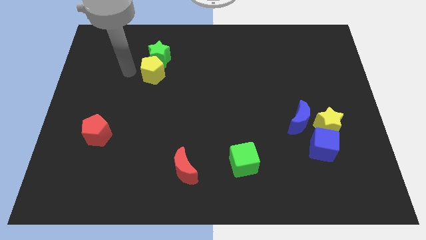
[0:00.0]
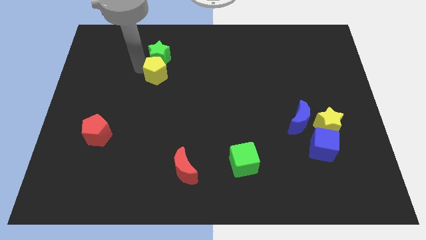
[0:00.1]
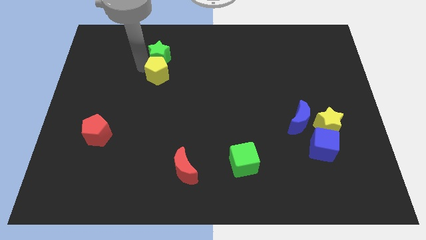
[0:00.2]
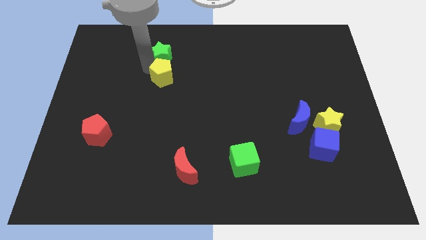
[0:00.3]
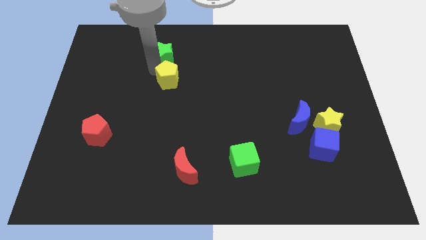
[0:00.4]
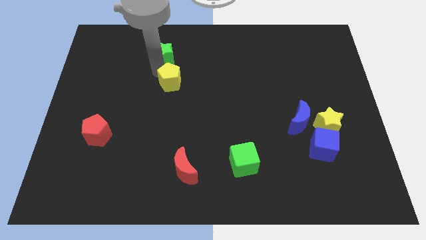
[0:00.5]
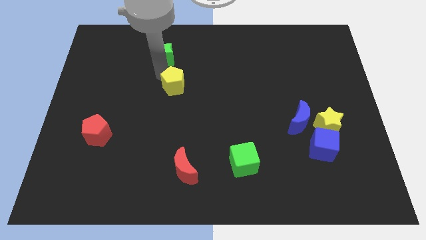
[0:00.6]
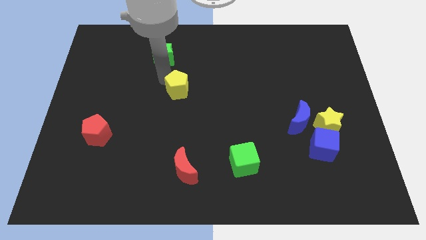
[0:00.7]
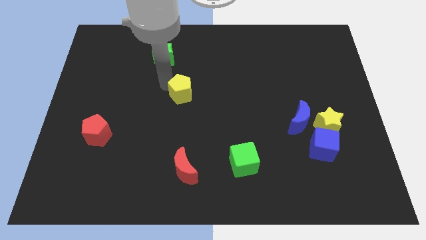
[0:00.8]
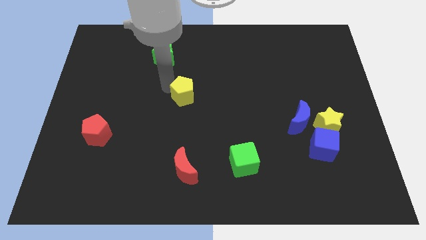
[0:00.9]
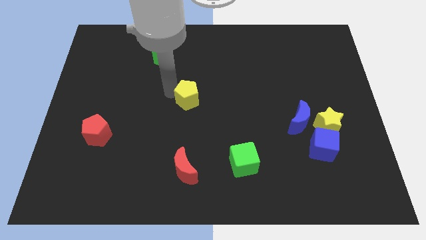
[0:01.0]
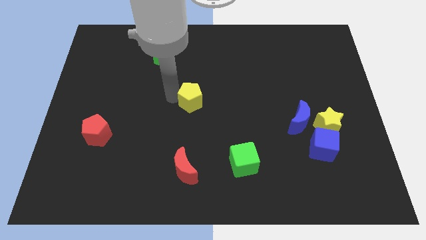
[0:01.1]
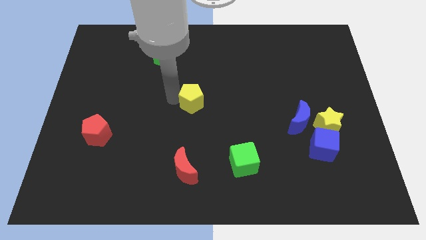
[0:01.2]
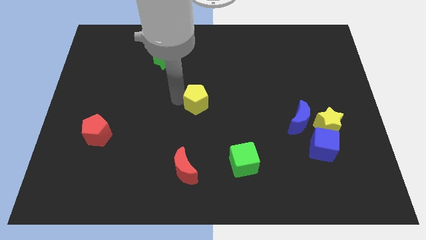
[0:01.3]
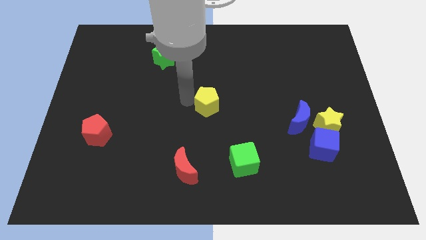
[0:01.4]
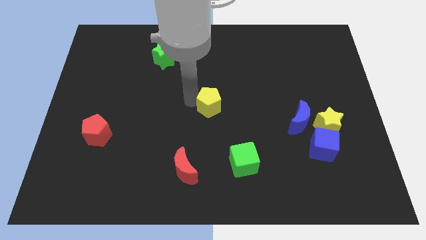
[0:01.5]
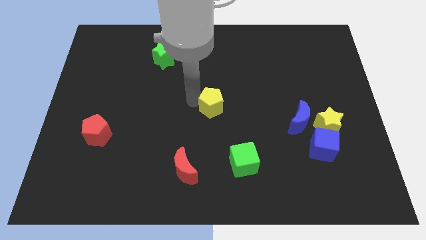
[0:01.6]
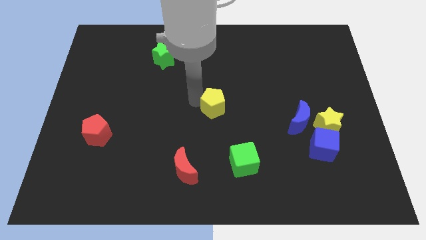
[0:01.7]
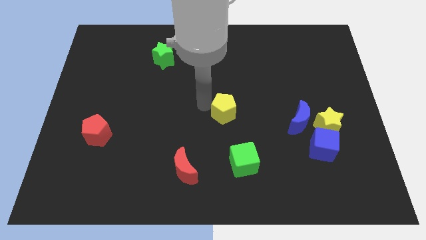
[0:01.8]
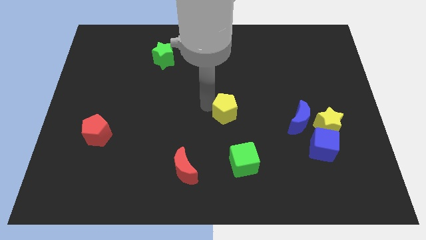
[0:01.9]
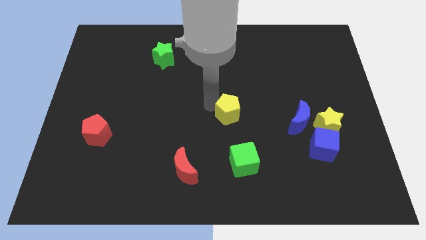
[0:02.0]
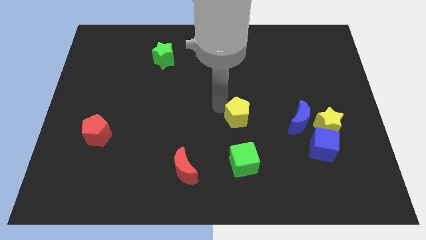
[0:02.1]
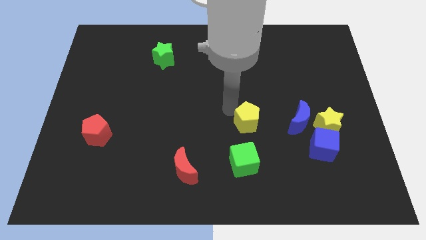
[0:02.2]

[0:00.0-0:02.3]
place the yellow pentagon vertically above the green cube

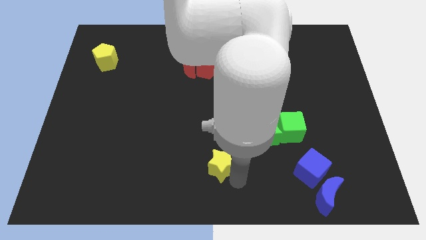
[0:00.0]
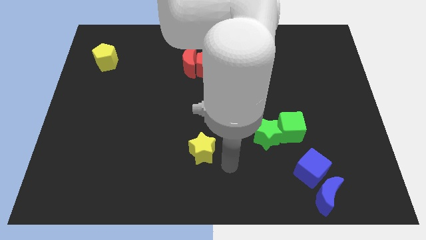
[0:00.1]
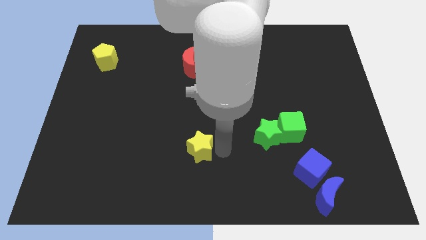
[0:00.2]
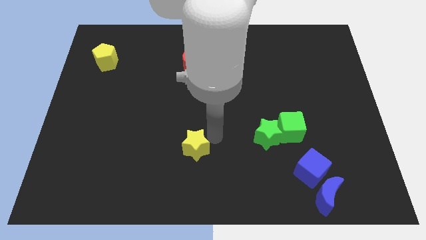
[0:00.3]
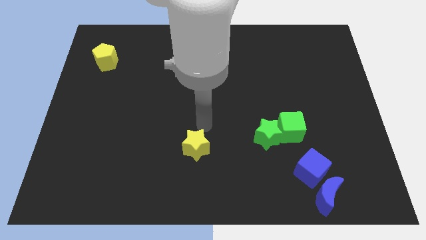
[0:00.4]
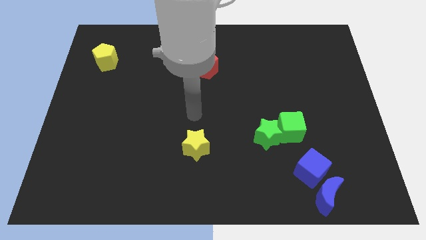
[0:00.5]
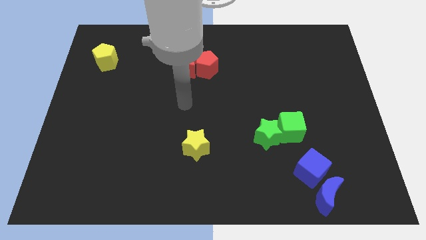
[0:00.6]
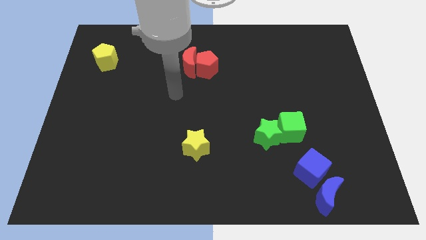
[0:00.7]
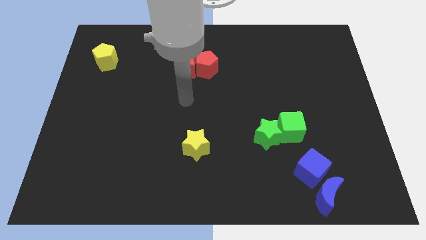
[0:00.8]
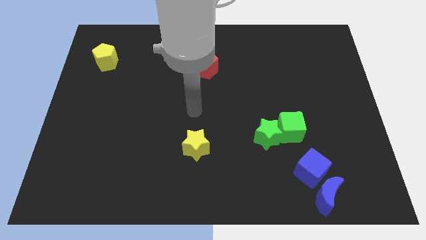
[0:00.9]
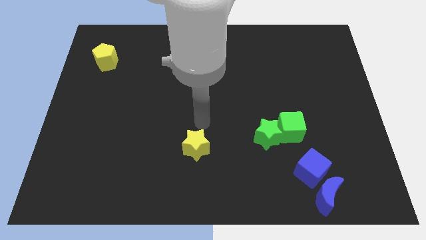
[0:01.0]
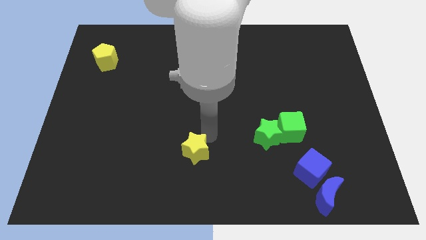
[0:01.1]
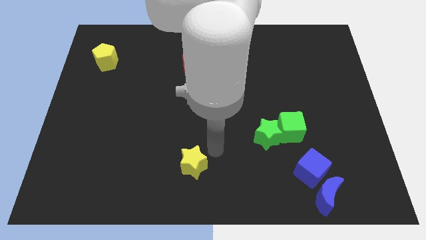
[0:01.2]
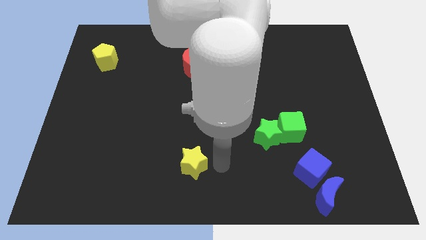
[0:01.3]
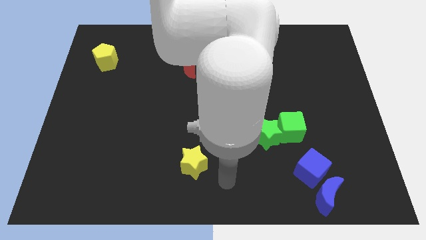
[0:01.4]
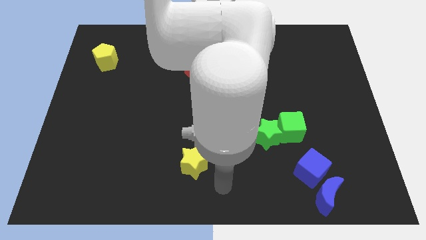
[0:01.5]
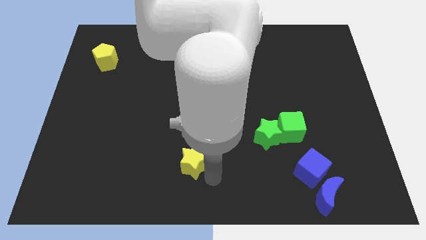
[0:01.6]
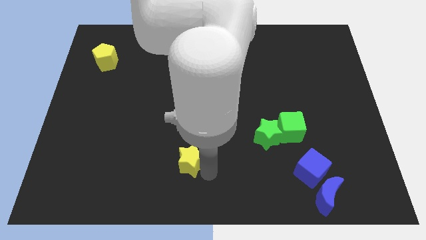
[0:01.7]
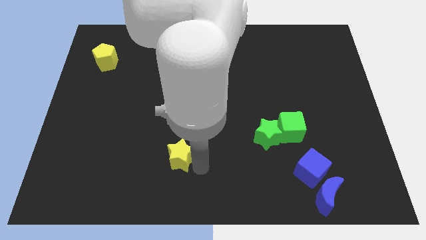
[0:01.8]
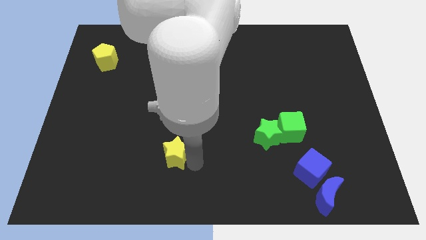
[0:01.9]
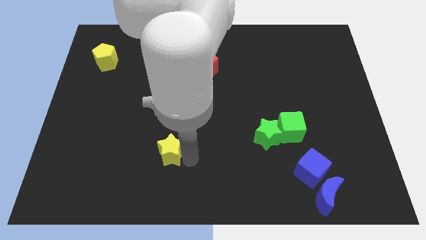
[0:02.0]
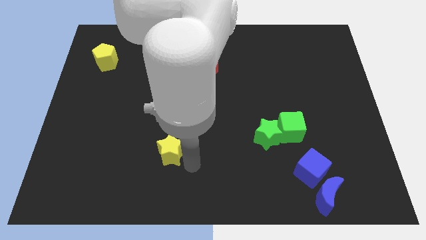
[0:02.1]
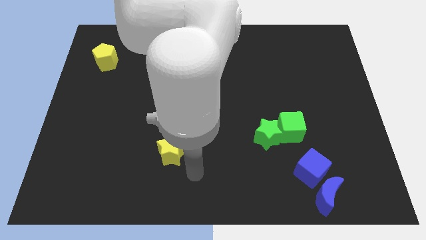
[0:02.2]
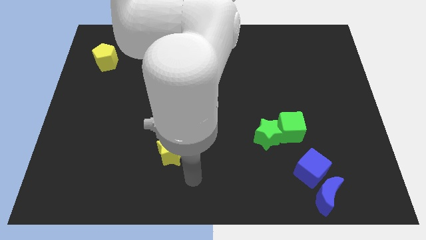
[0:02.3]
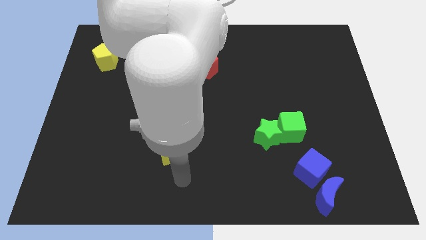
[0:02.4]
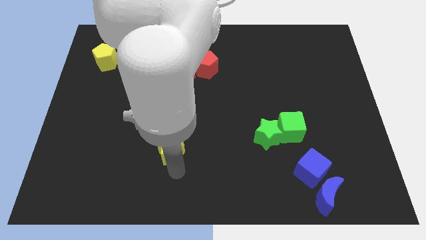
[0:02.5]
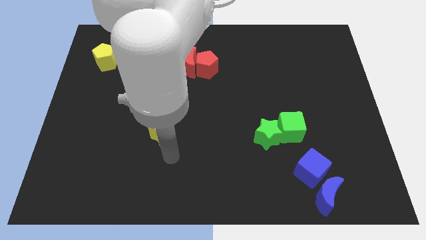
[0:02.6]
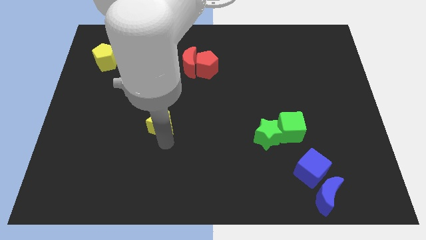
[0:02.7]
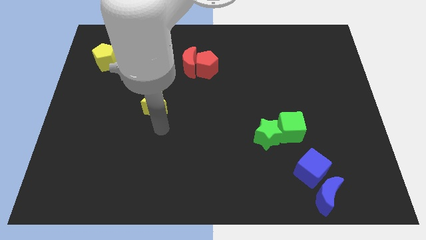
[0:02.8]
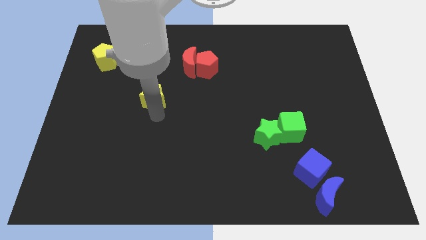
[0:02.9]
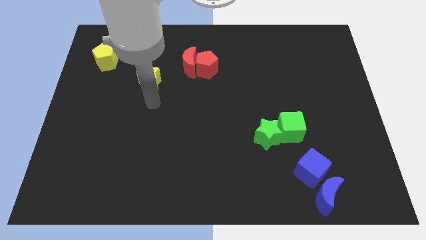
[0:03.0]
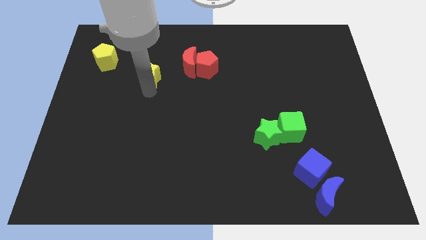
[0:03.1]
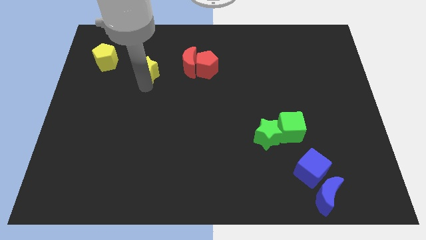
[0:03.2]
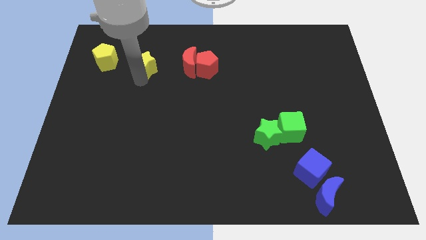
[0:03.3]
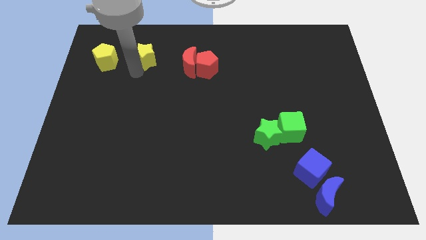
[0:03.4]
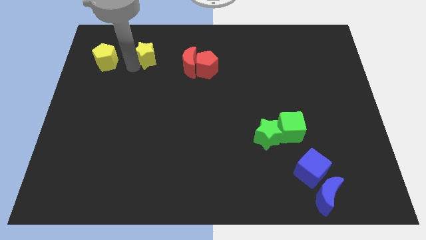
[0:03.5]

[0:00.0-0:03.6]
move the yellow star to the right of the yellow pentagon

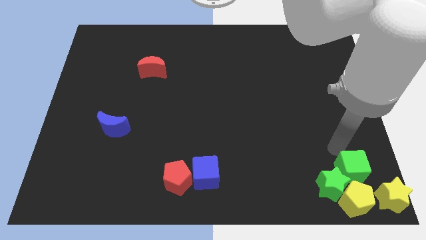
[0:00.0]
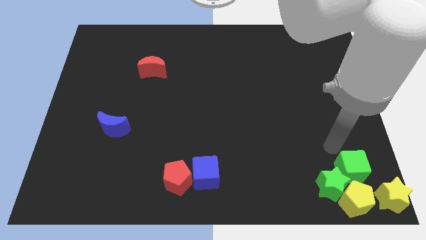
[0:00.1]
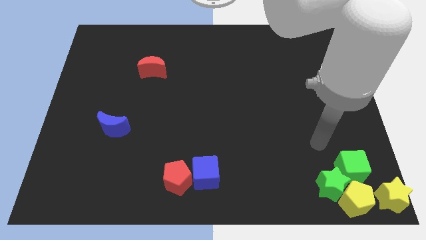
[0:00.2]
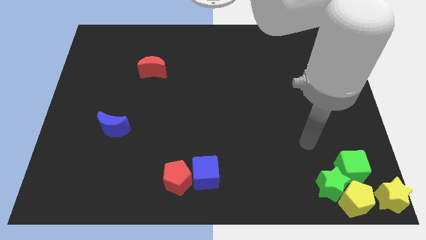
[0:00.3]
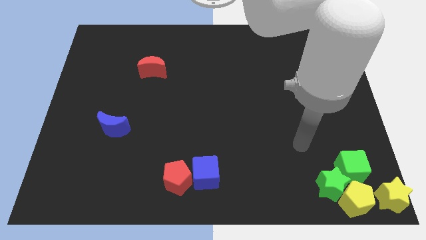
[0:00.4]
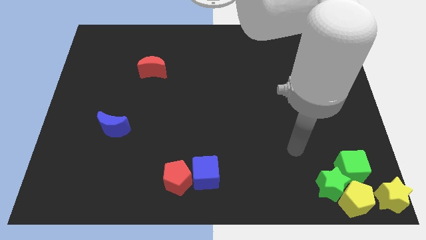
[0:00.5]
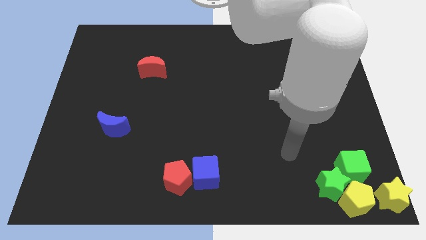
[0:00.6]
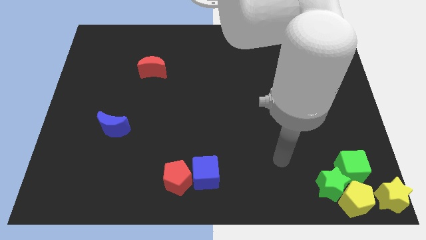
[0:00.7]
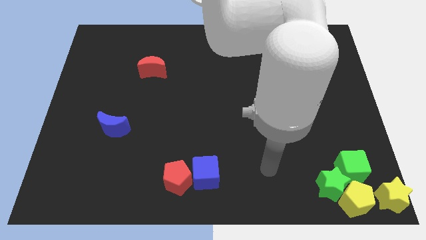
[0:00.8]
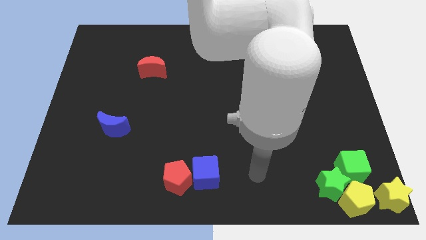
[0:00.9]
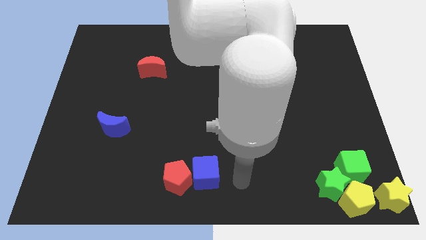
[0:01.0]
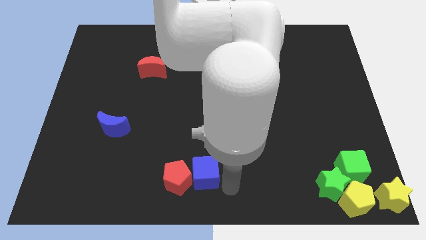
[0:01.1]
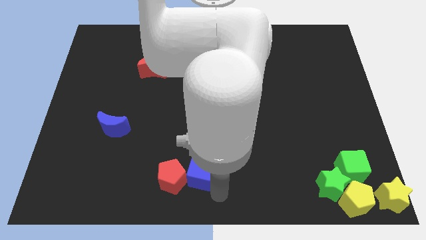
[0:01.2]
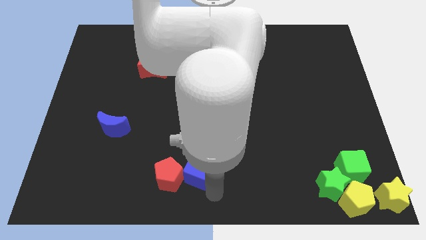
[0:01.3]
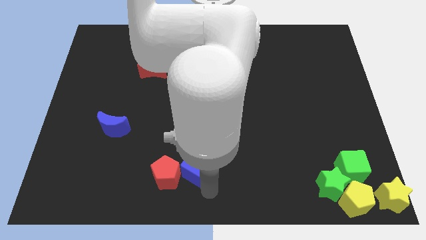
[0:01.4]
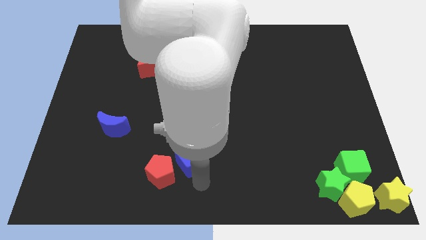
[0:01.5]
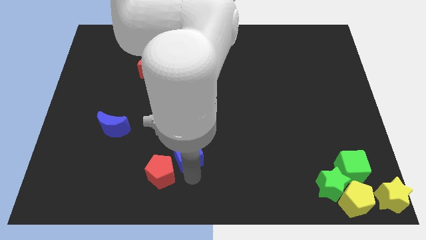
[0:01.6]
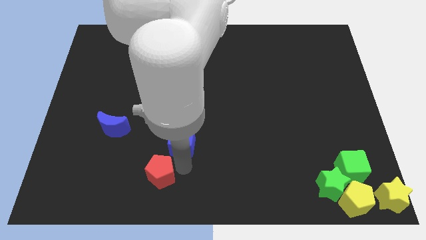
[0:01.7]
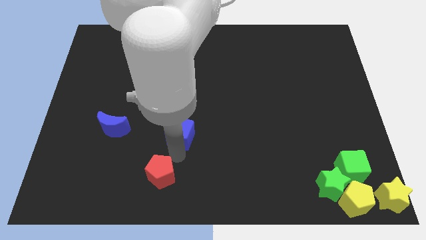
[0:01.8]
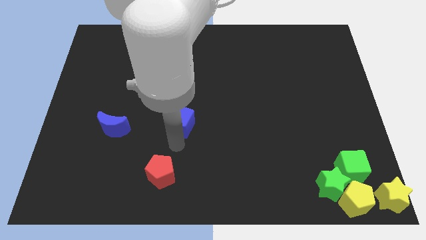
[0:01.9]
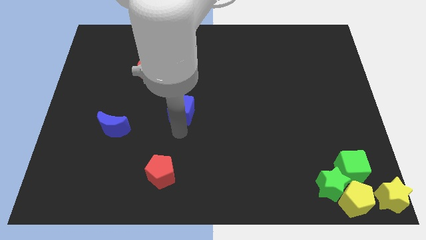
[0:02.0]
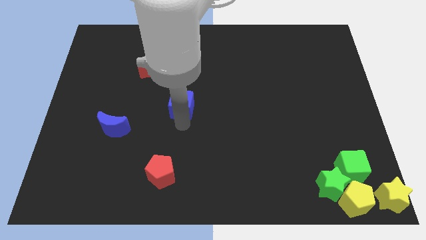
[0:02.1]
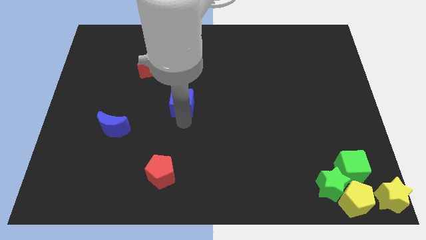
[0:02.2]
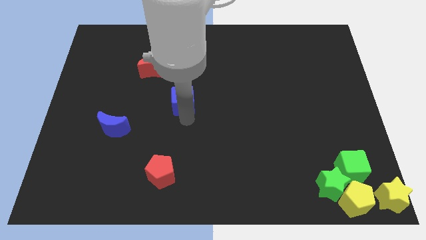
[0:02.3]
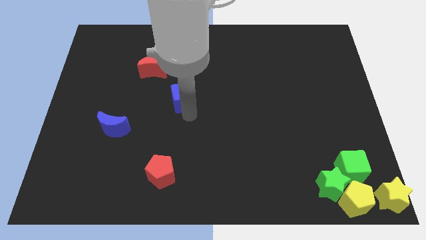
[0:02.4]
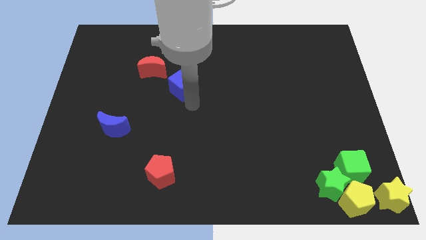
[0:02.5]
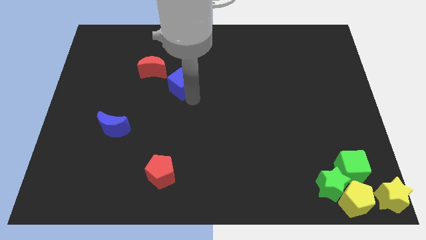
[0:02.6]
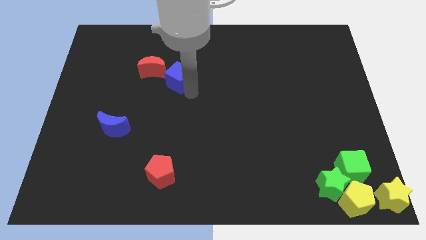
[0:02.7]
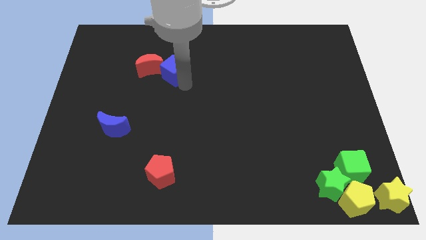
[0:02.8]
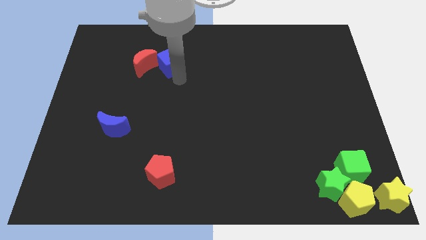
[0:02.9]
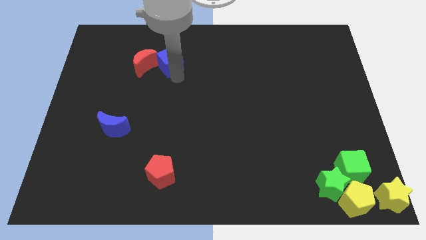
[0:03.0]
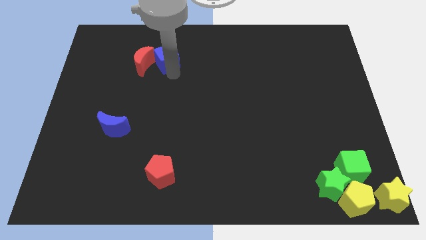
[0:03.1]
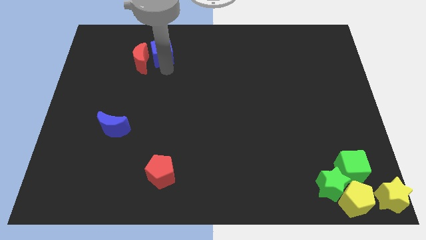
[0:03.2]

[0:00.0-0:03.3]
push the blue cube into the red moon
